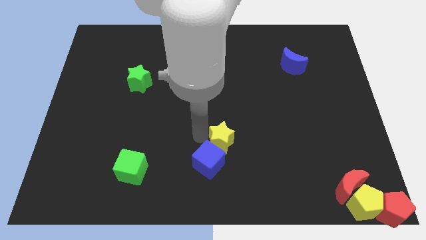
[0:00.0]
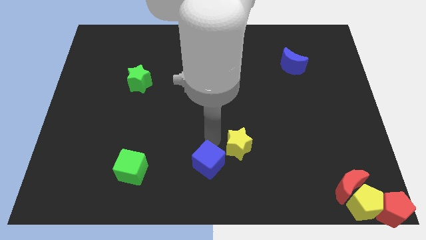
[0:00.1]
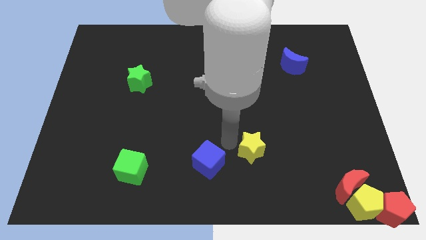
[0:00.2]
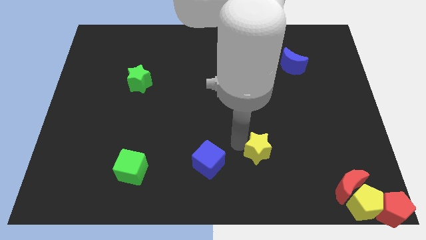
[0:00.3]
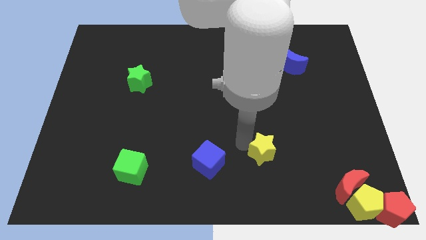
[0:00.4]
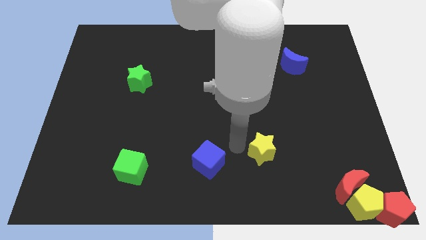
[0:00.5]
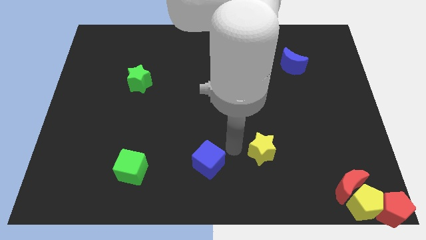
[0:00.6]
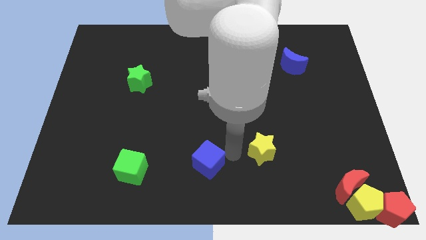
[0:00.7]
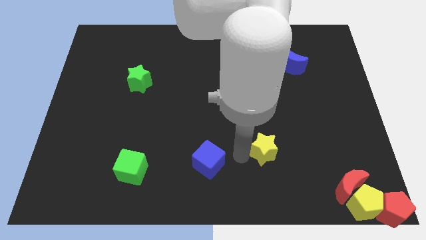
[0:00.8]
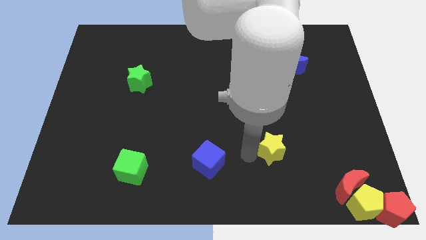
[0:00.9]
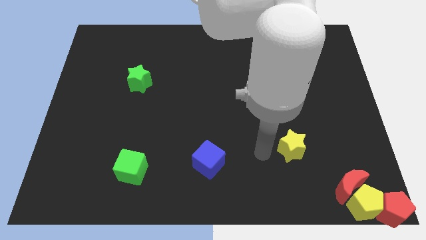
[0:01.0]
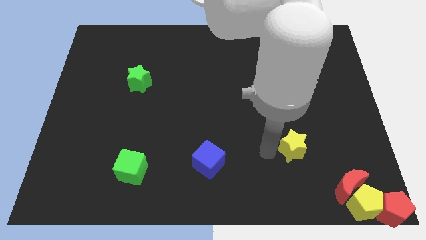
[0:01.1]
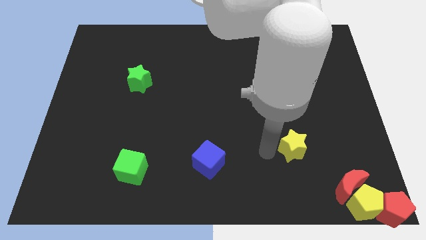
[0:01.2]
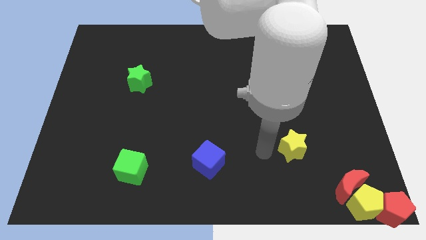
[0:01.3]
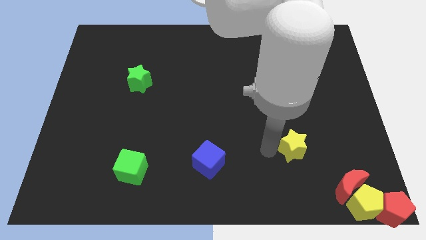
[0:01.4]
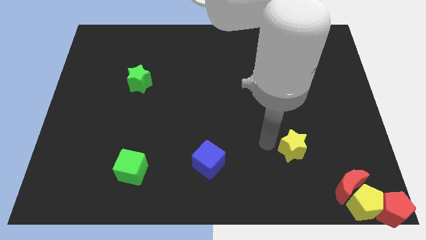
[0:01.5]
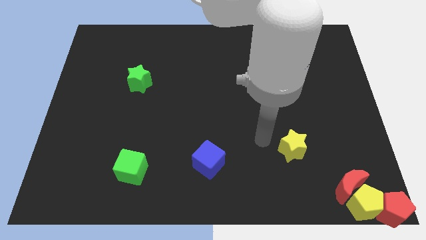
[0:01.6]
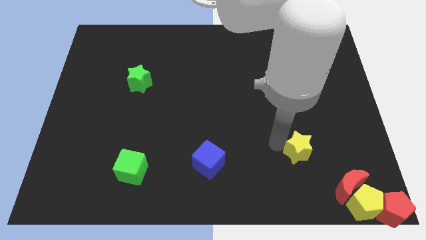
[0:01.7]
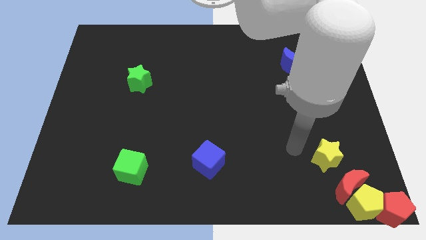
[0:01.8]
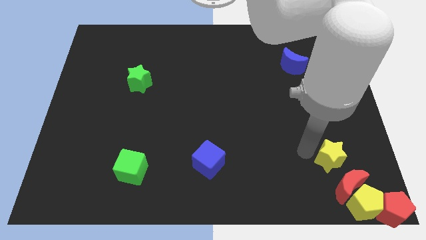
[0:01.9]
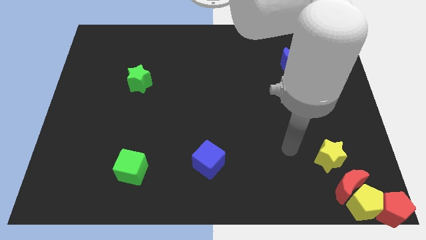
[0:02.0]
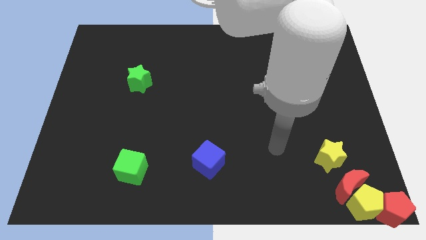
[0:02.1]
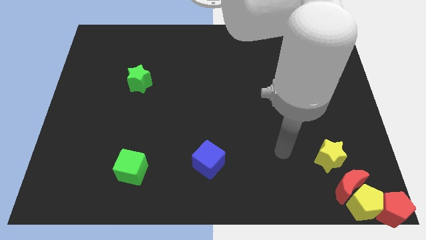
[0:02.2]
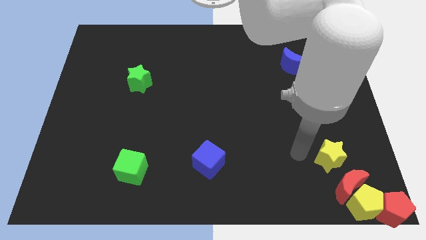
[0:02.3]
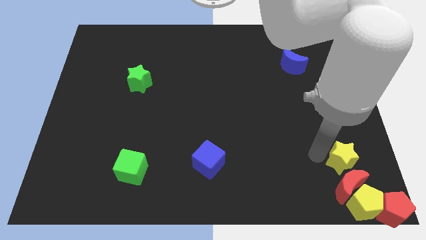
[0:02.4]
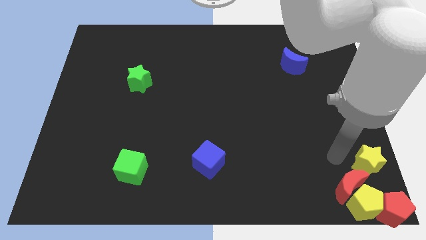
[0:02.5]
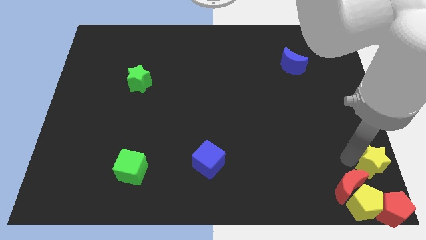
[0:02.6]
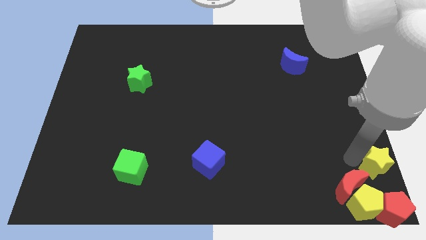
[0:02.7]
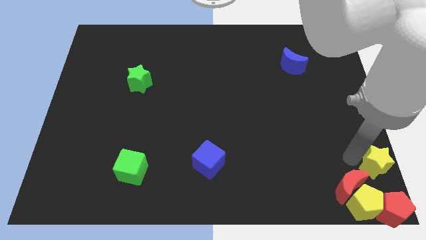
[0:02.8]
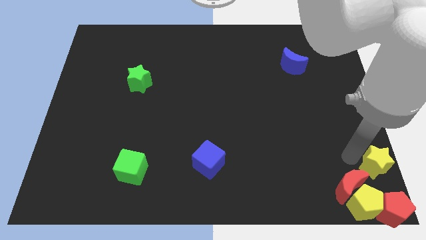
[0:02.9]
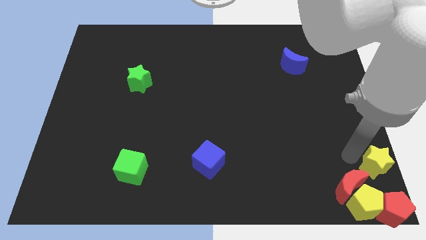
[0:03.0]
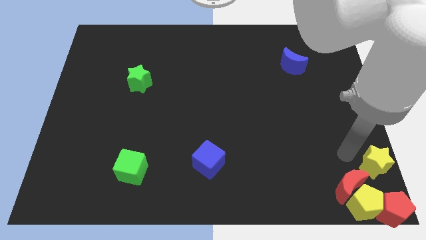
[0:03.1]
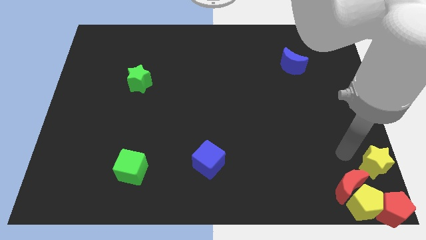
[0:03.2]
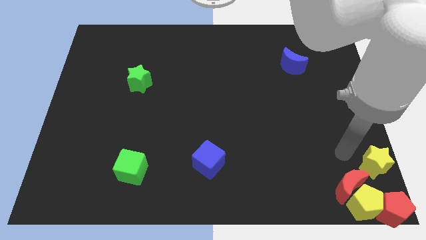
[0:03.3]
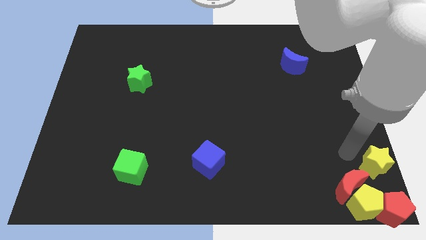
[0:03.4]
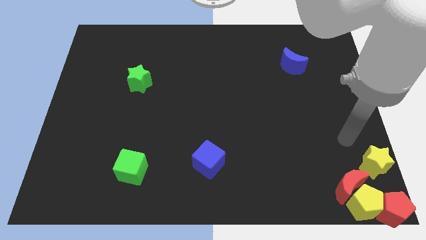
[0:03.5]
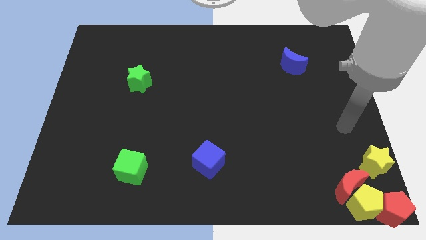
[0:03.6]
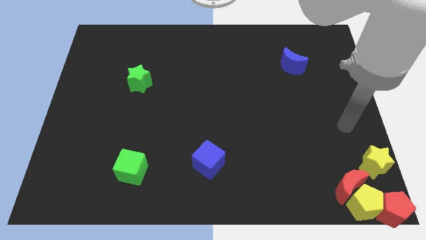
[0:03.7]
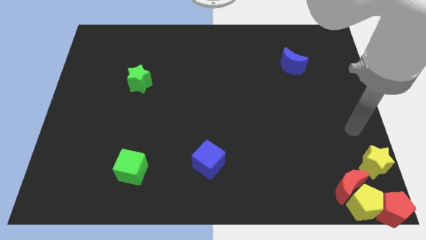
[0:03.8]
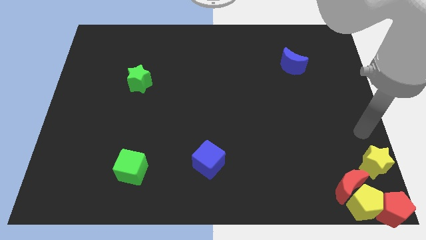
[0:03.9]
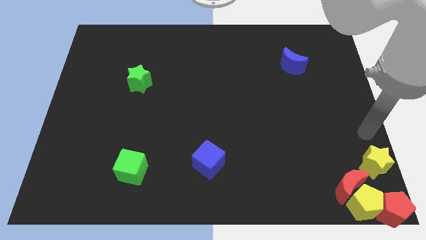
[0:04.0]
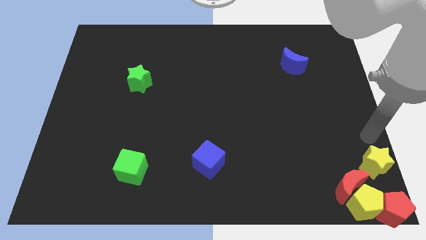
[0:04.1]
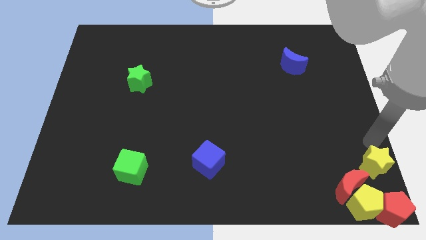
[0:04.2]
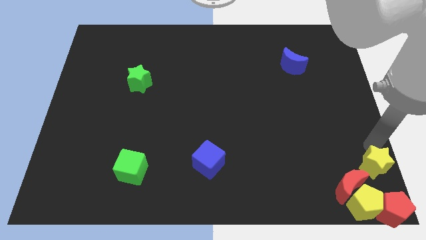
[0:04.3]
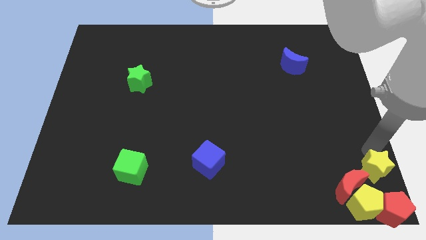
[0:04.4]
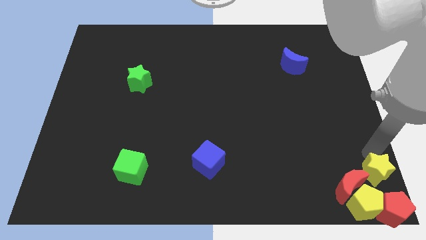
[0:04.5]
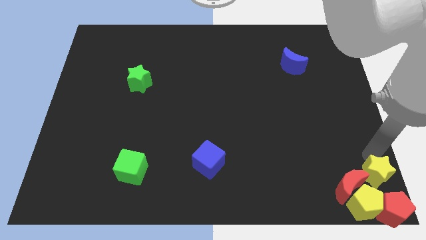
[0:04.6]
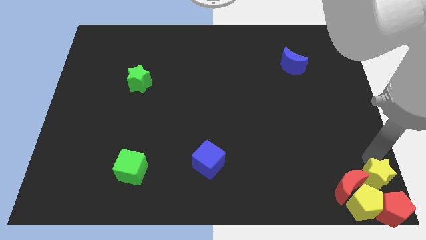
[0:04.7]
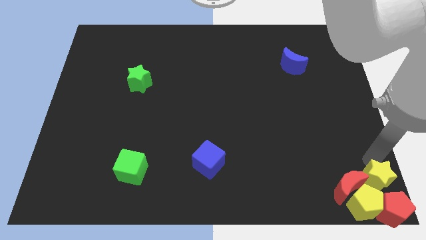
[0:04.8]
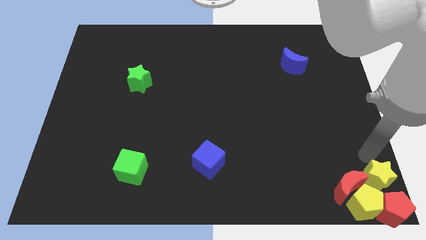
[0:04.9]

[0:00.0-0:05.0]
push the yellow star to the right of the red crescent

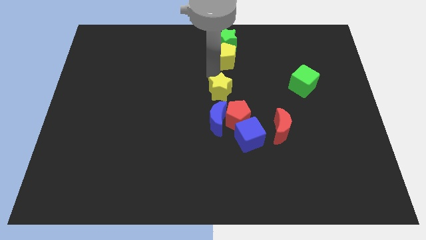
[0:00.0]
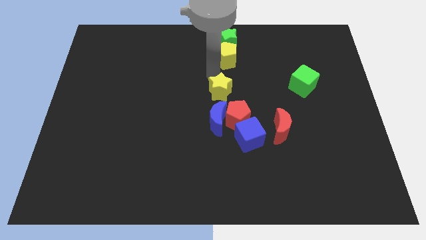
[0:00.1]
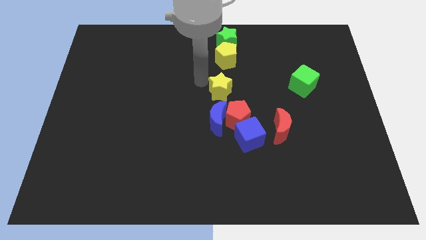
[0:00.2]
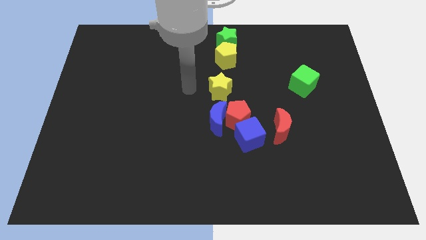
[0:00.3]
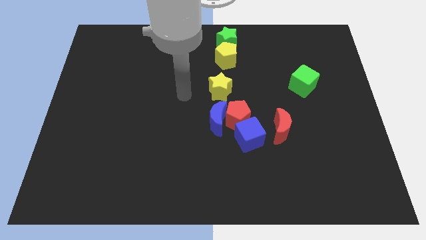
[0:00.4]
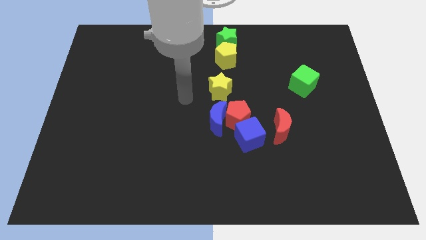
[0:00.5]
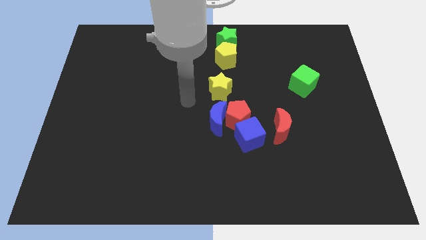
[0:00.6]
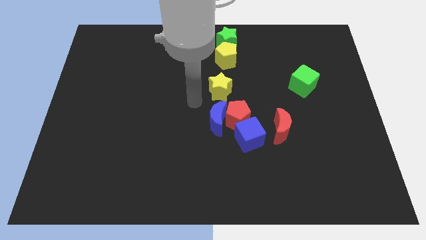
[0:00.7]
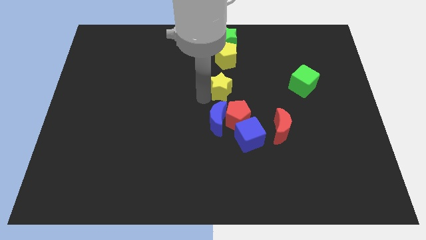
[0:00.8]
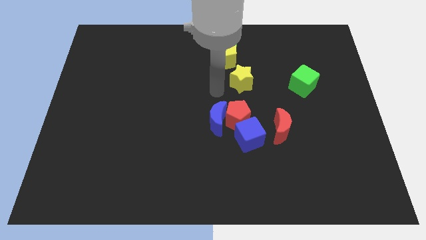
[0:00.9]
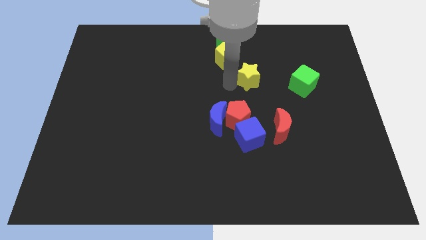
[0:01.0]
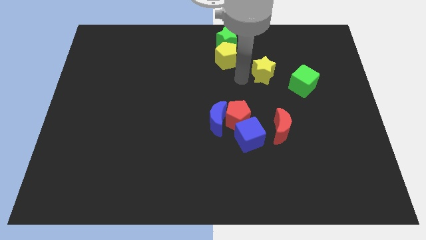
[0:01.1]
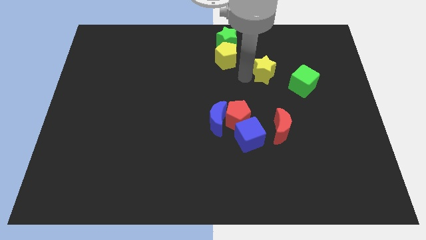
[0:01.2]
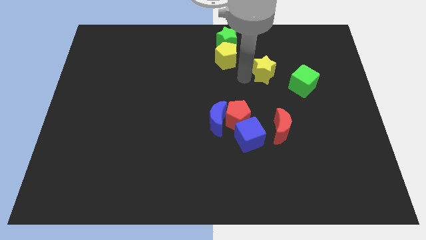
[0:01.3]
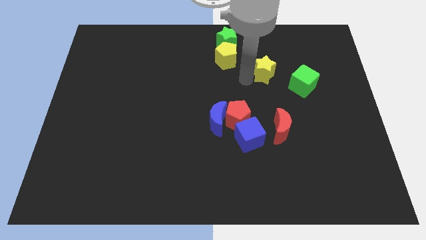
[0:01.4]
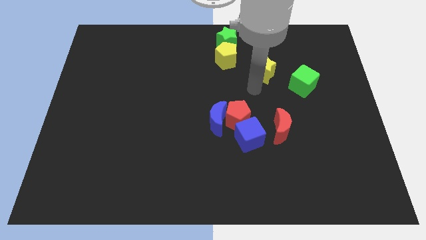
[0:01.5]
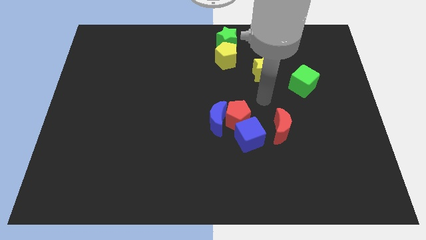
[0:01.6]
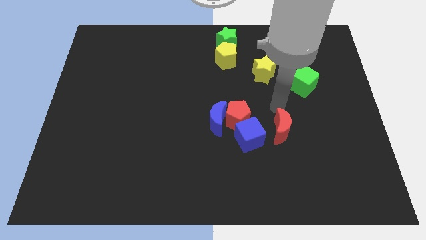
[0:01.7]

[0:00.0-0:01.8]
push the yellow star between green cube and yellow pentagon

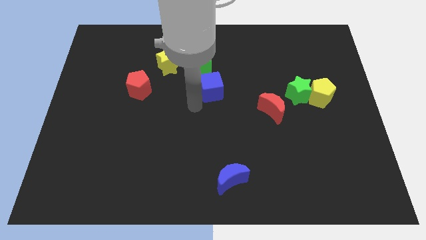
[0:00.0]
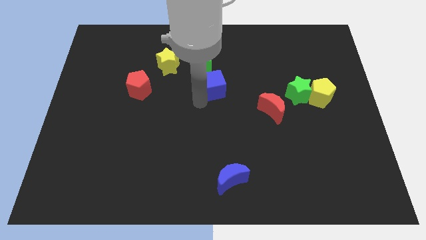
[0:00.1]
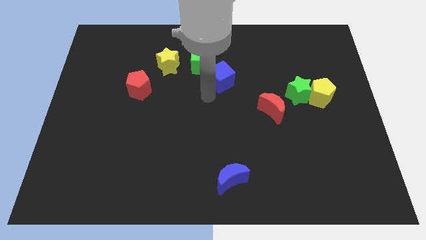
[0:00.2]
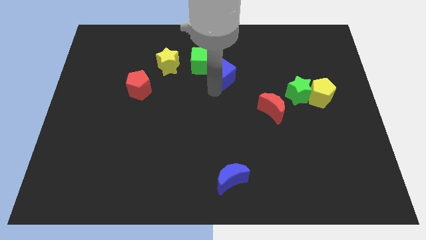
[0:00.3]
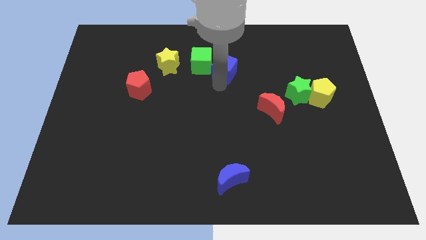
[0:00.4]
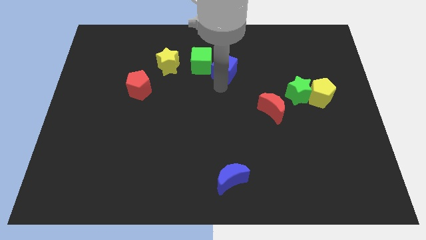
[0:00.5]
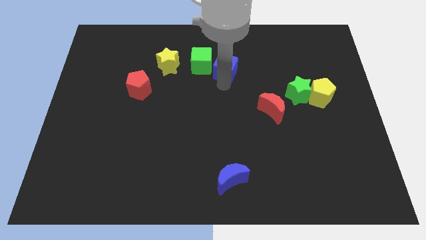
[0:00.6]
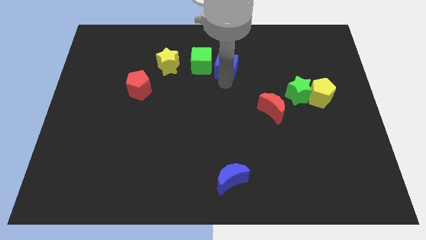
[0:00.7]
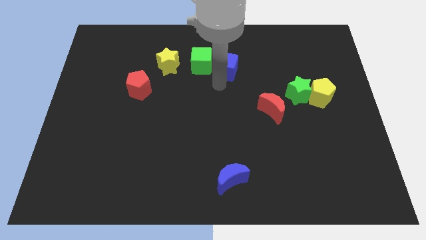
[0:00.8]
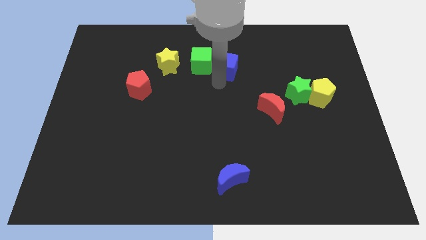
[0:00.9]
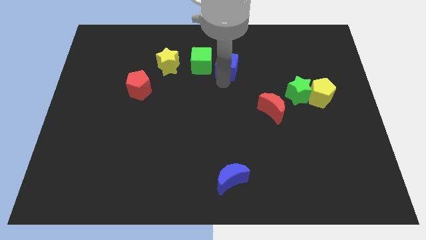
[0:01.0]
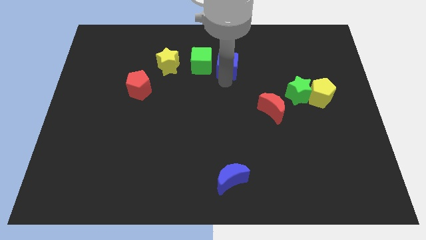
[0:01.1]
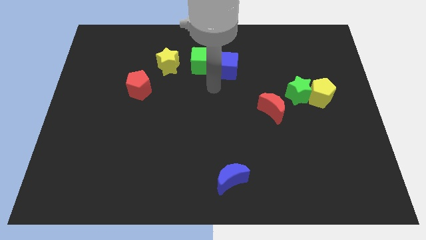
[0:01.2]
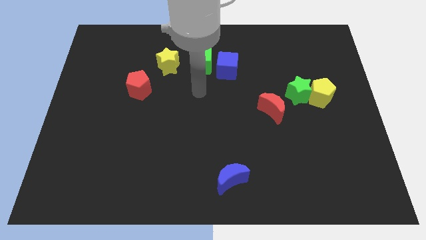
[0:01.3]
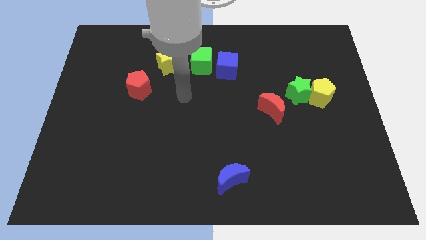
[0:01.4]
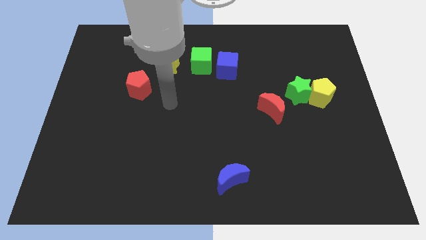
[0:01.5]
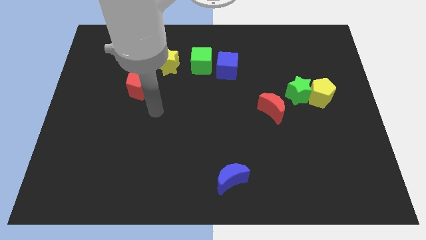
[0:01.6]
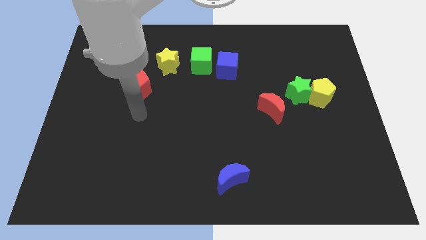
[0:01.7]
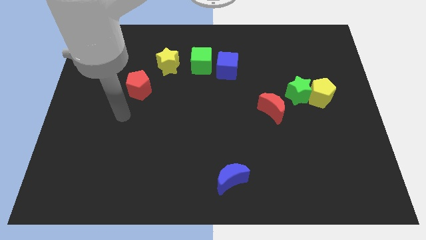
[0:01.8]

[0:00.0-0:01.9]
place blue cube to the right of green cube

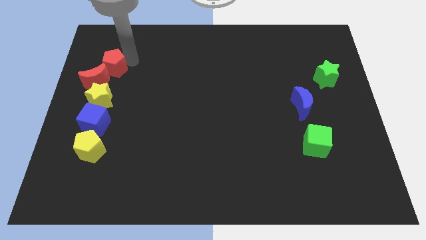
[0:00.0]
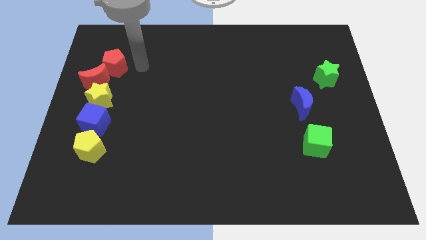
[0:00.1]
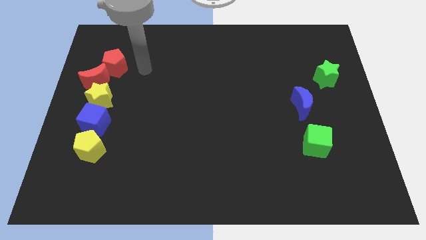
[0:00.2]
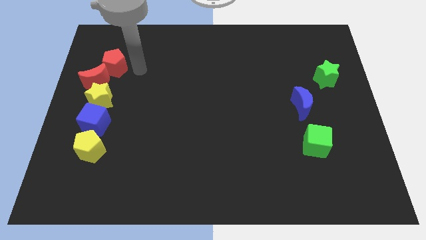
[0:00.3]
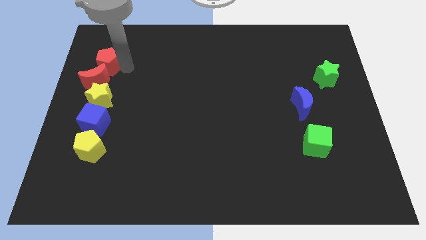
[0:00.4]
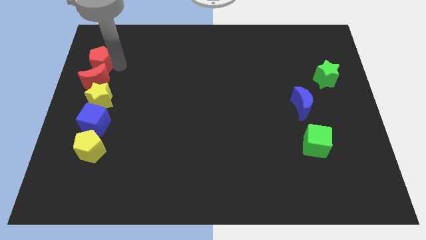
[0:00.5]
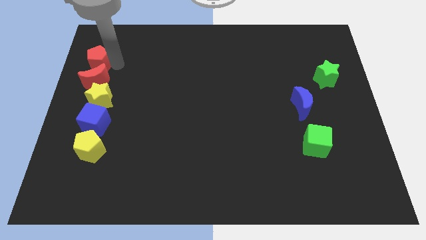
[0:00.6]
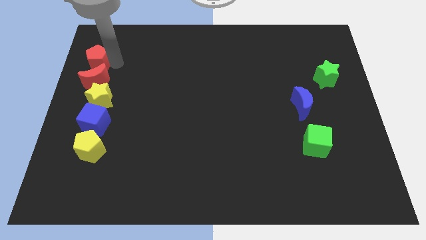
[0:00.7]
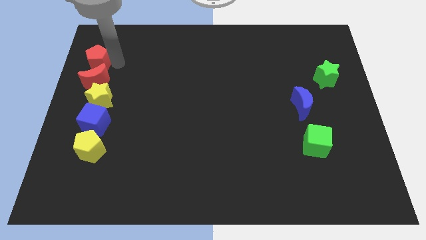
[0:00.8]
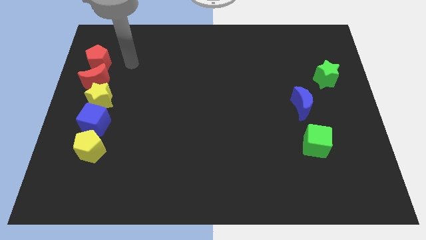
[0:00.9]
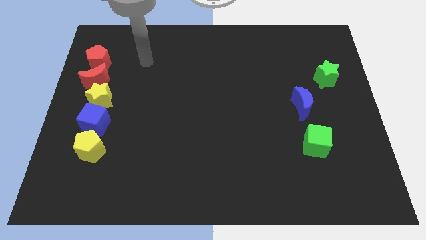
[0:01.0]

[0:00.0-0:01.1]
place the red pentagon above the red crescent
